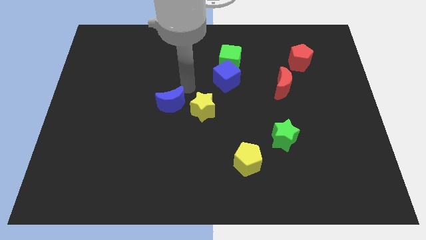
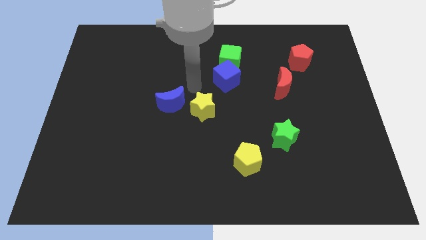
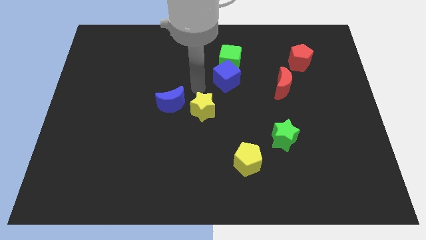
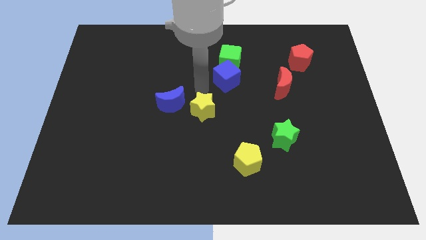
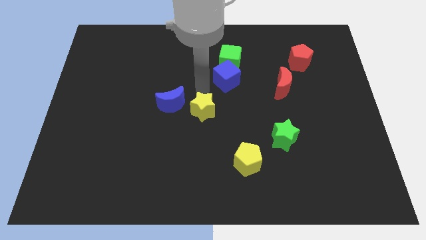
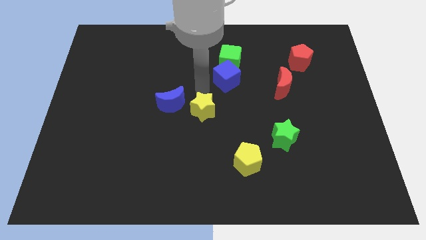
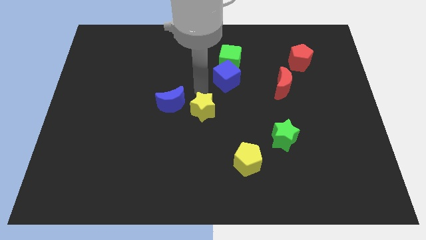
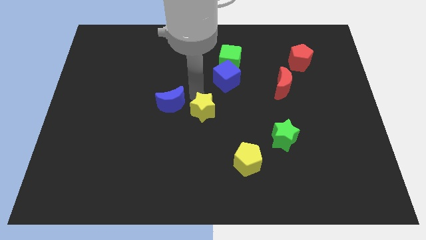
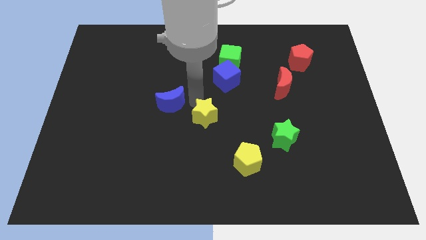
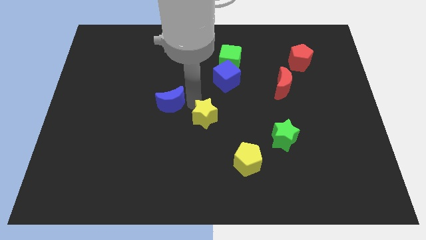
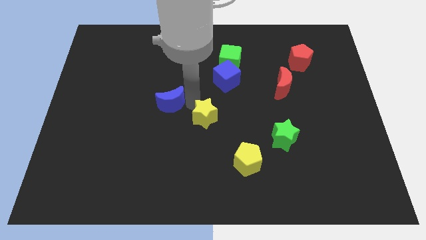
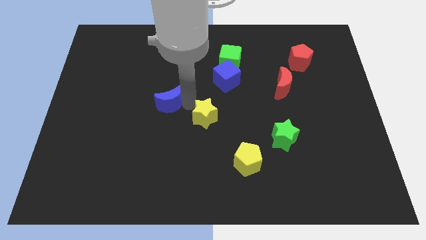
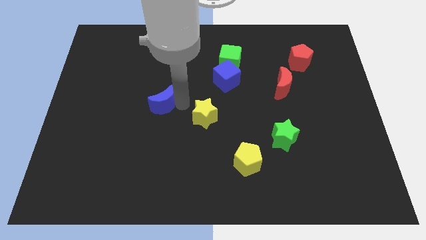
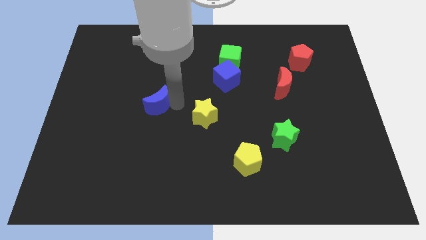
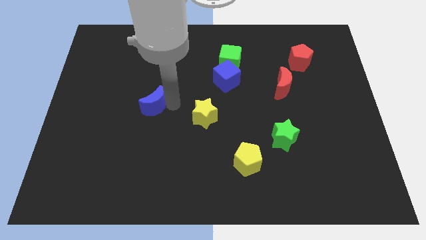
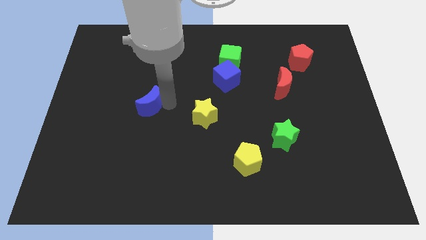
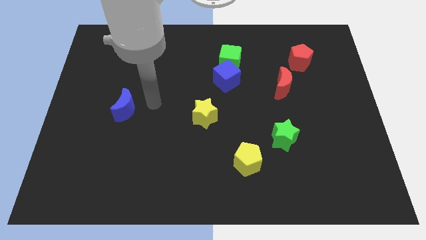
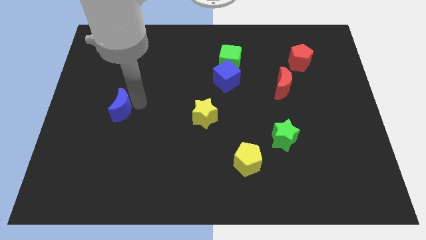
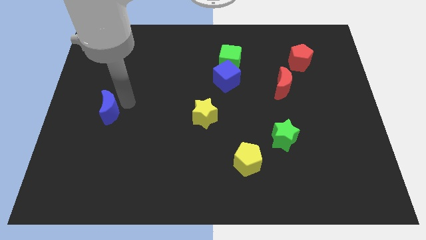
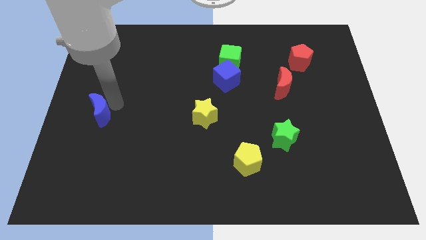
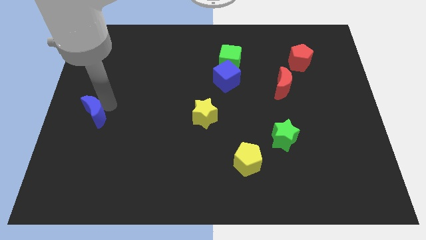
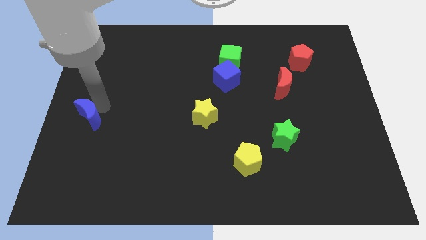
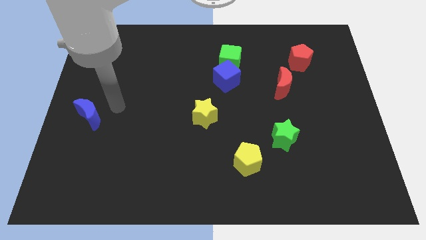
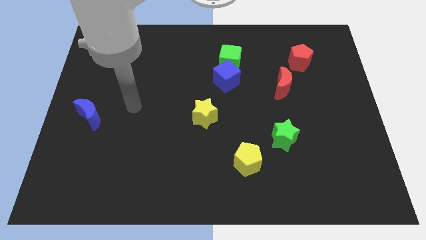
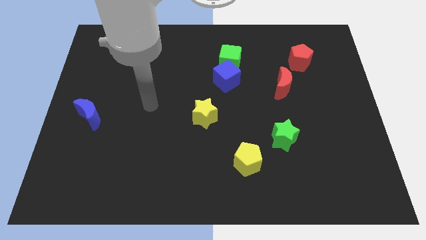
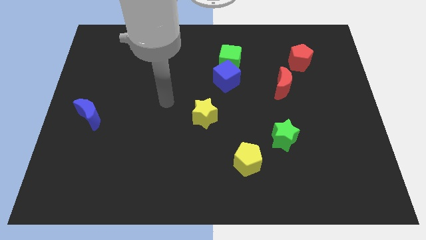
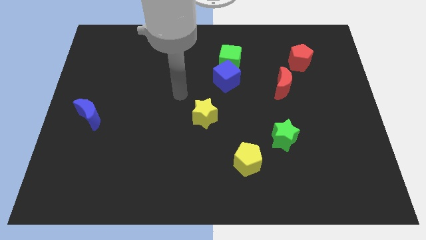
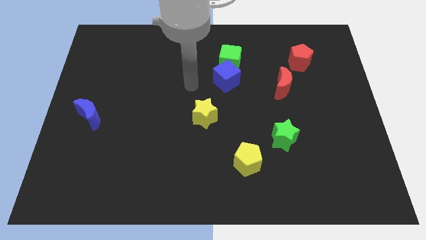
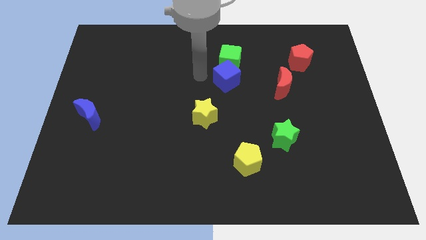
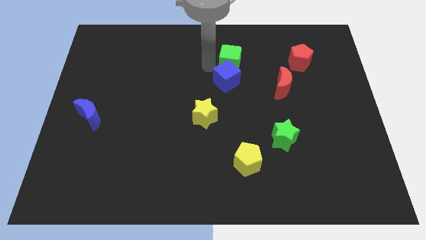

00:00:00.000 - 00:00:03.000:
push the blue moon to the left side of the board

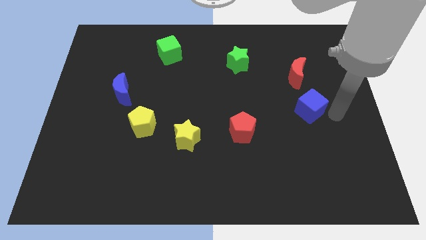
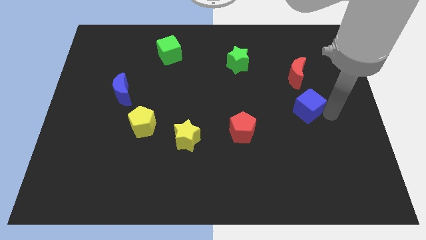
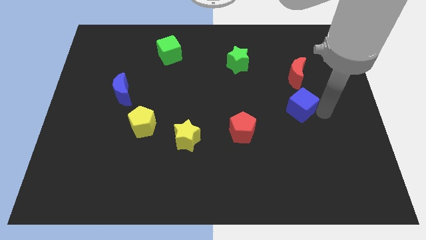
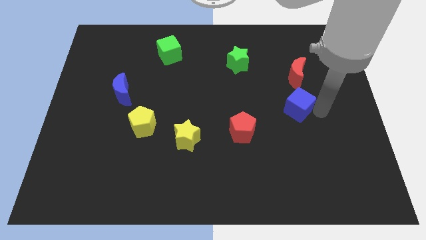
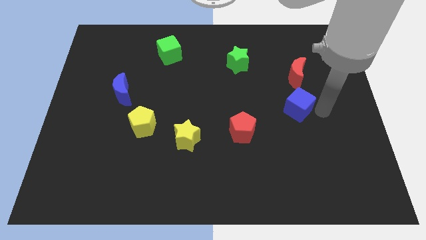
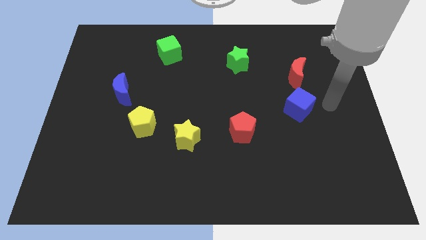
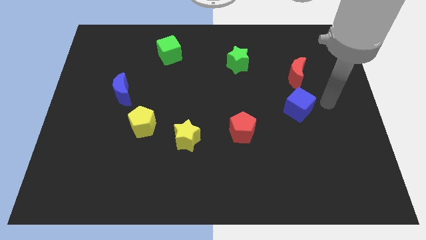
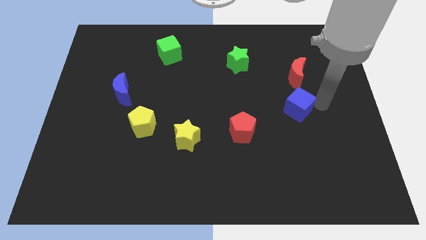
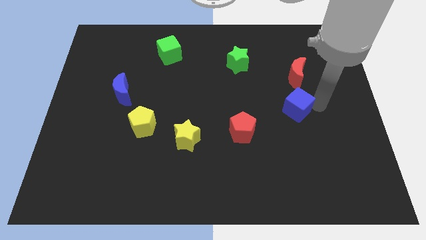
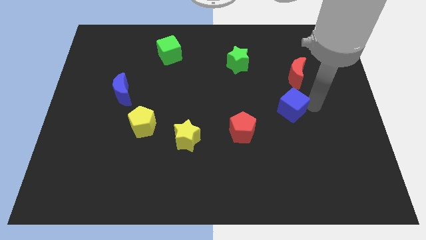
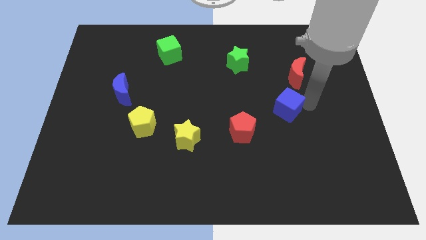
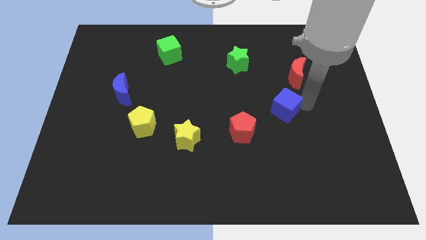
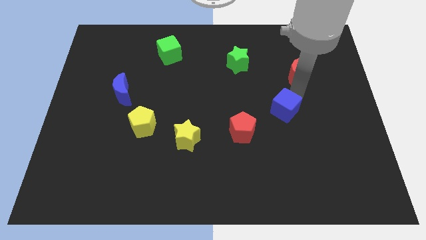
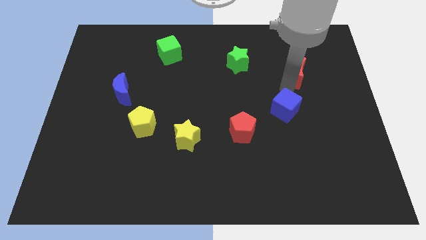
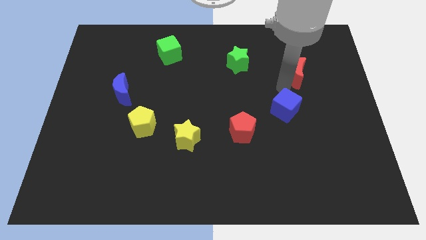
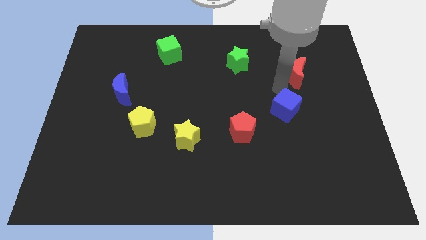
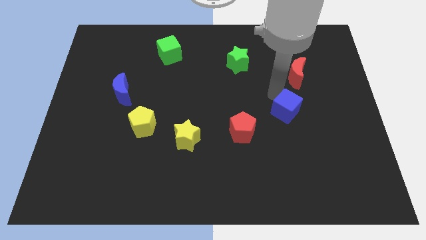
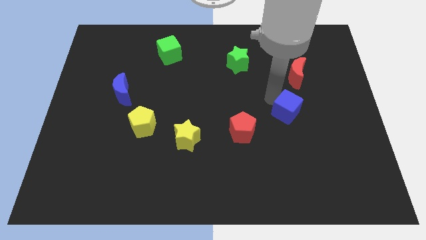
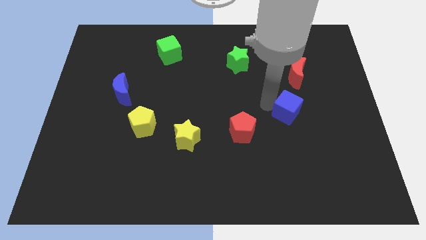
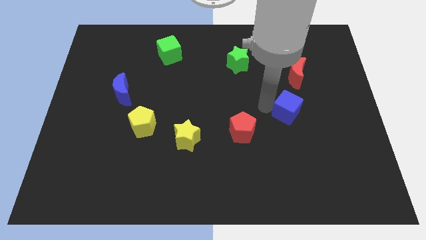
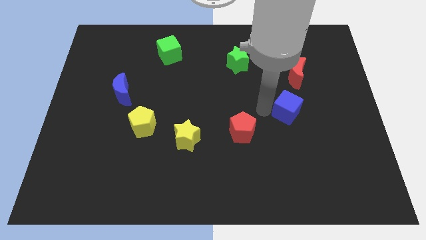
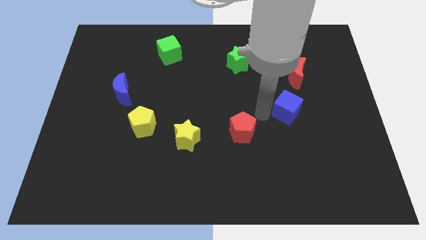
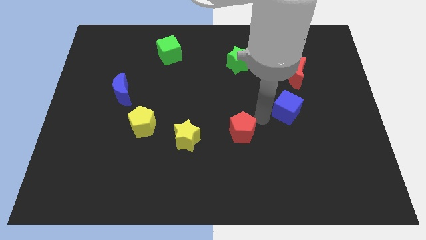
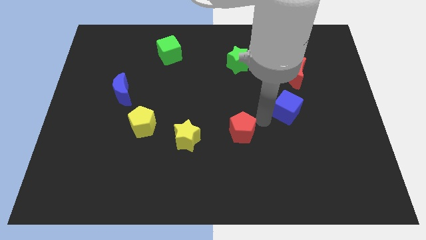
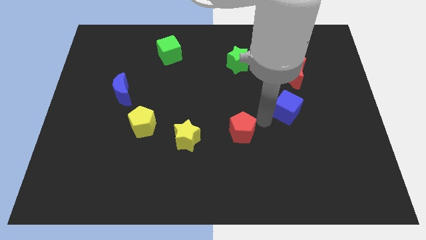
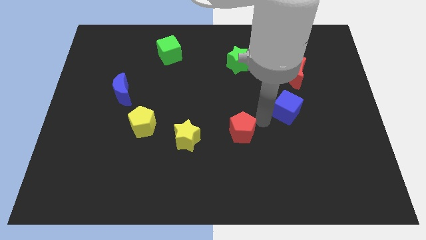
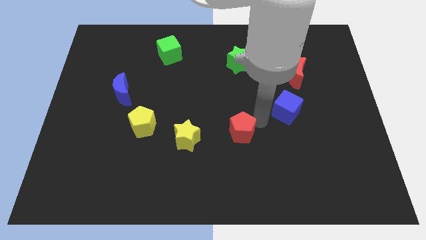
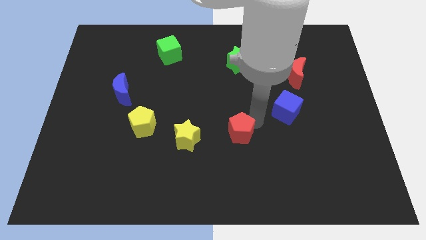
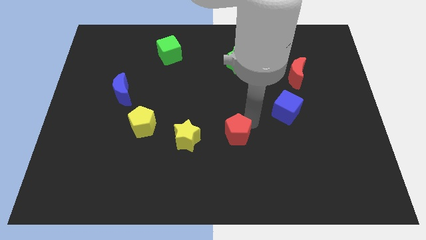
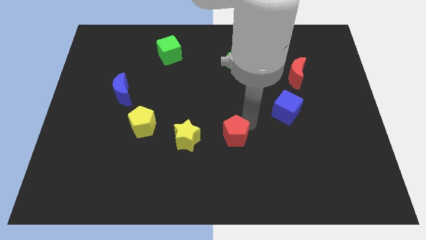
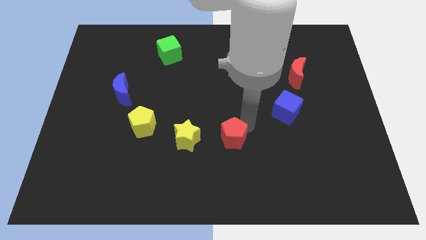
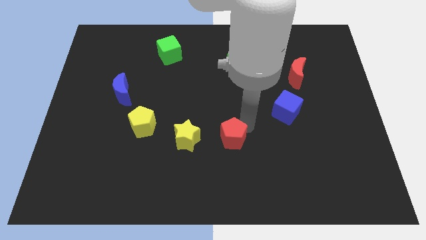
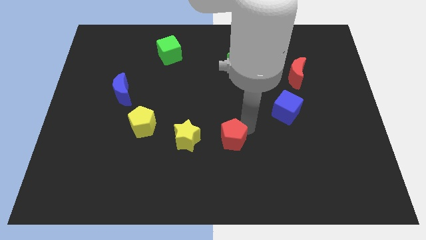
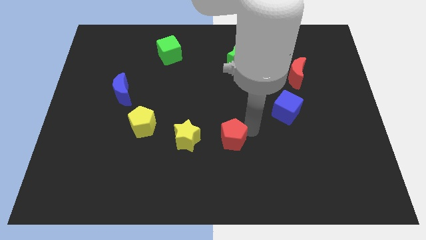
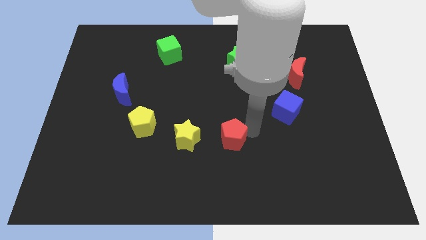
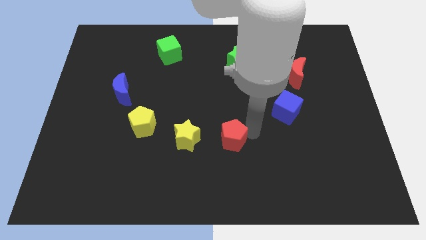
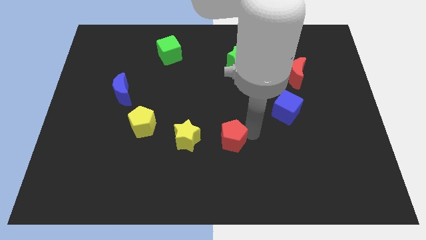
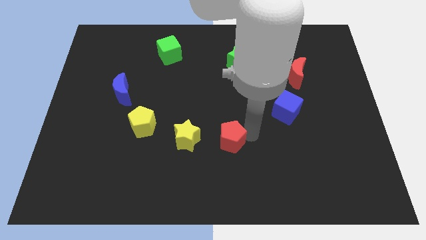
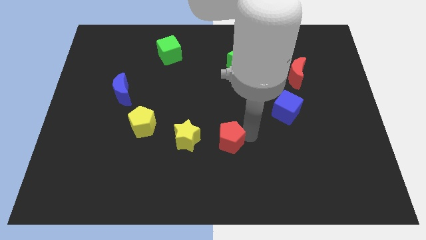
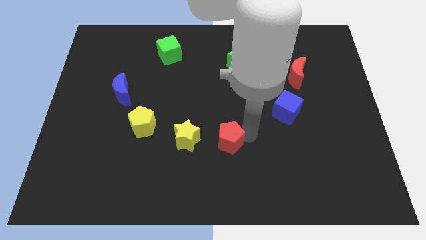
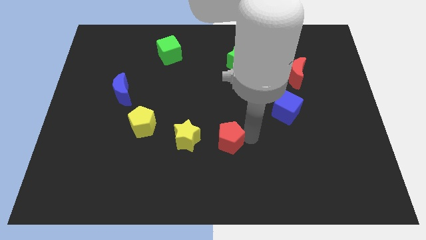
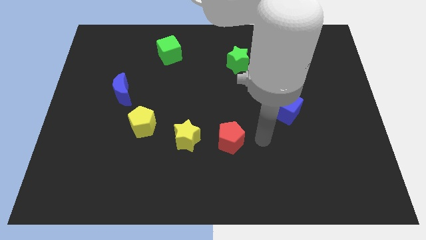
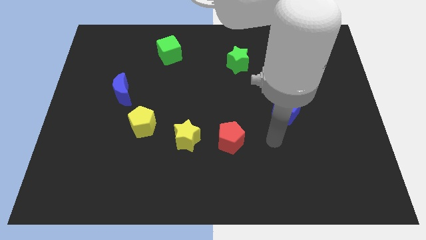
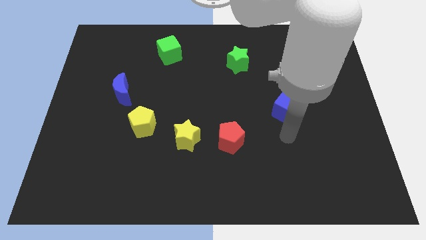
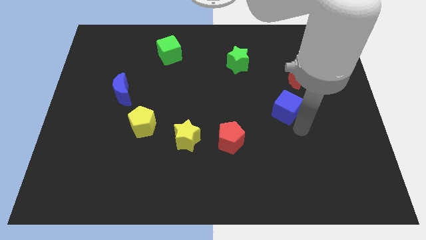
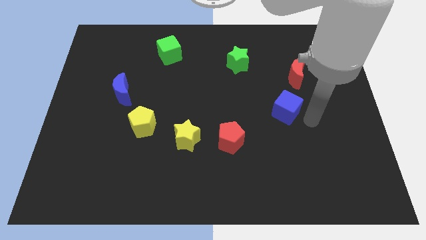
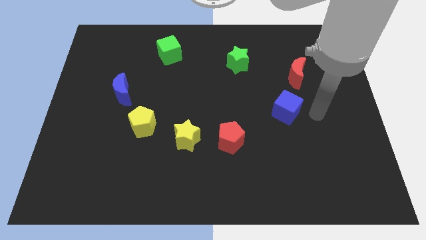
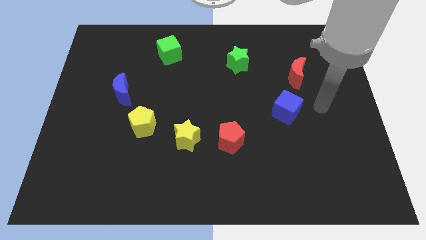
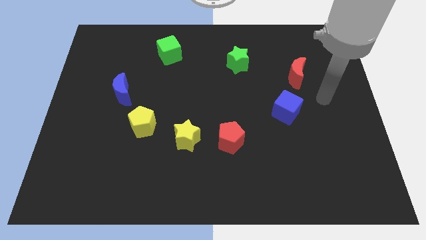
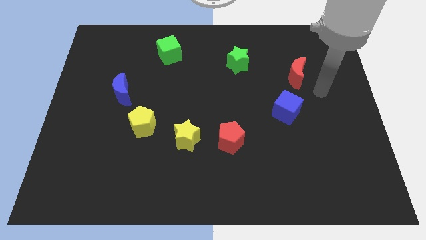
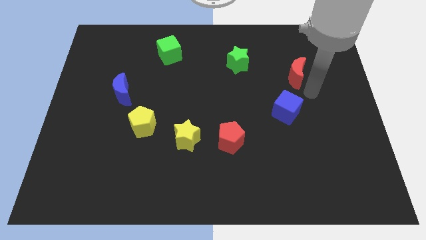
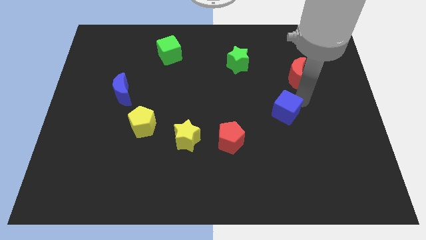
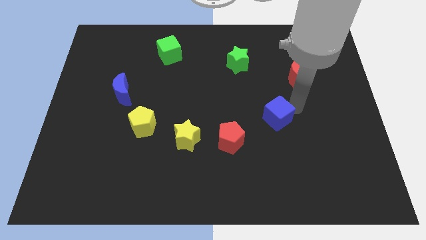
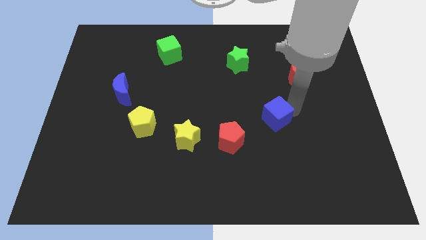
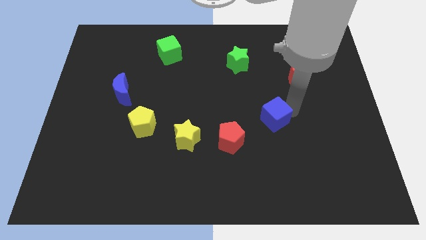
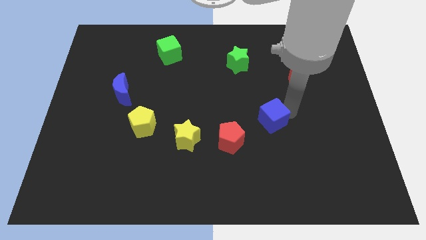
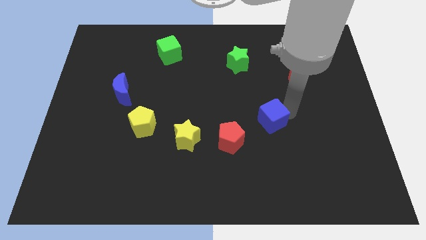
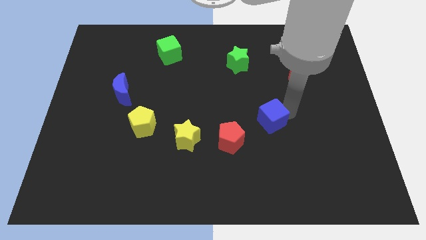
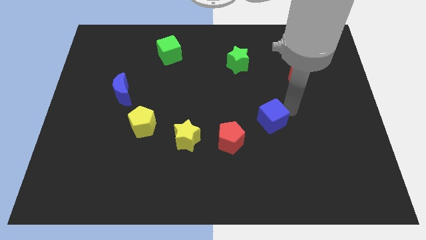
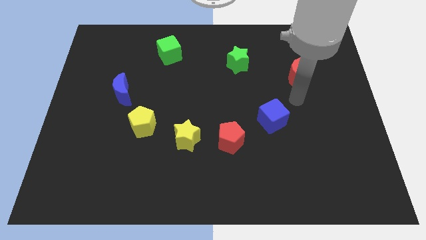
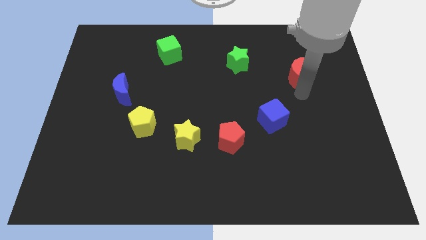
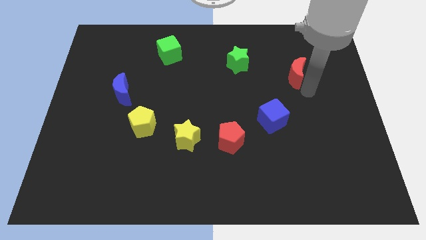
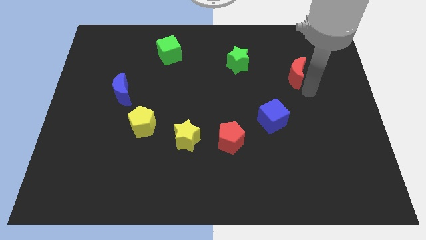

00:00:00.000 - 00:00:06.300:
push the blue cube adjacent to the red pentagon
